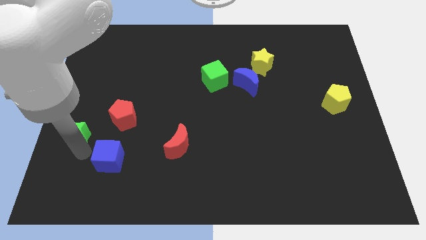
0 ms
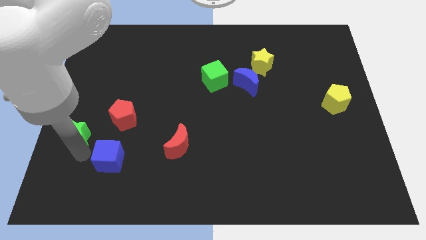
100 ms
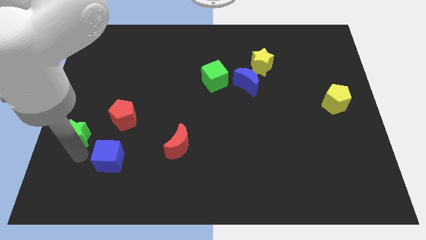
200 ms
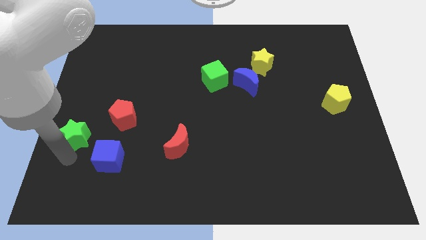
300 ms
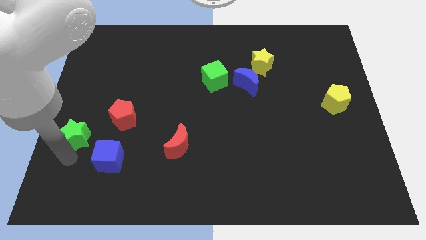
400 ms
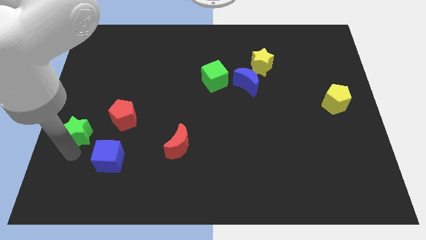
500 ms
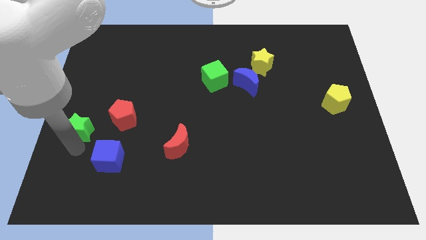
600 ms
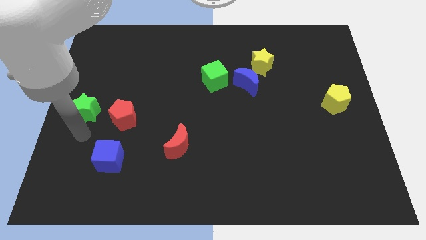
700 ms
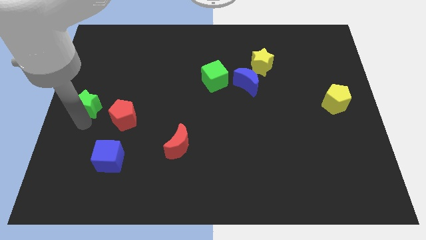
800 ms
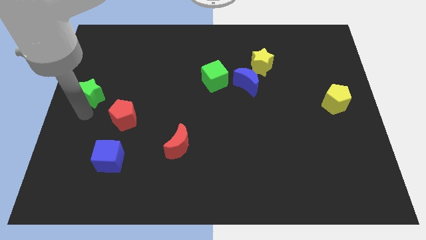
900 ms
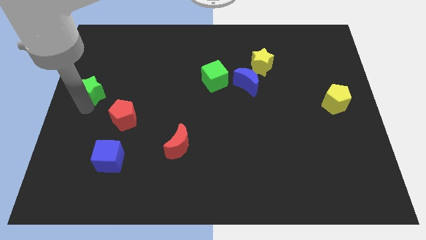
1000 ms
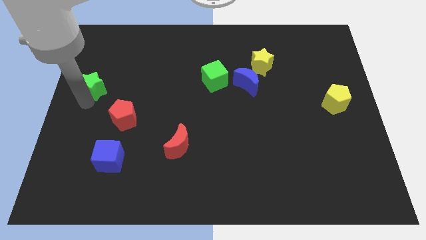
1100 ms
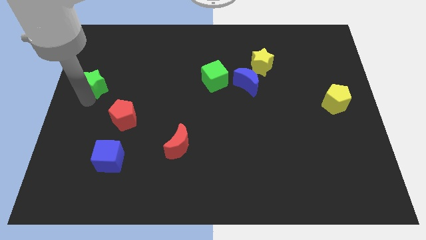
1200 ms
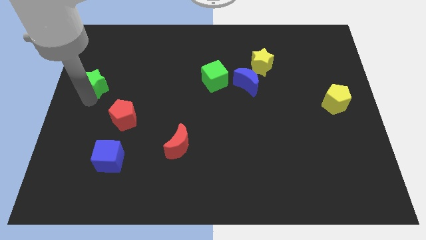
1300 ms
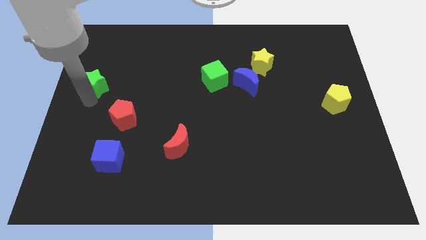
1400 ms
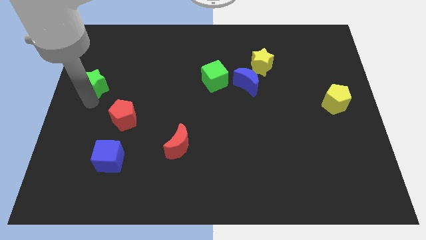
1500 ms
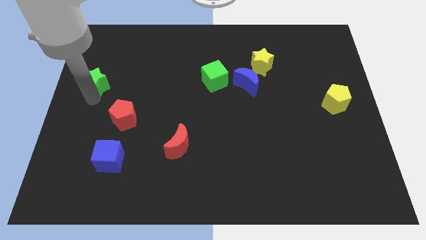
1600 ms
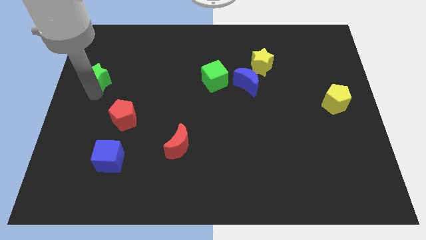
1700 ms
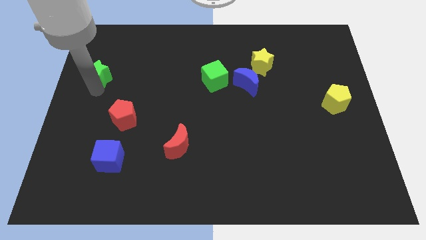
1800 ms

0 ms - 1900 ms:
place the green star towards the left center of the board

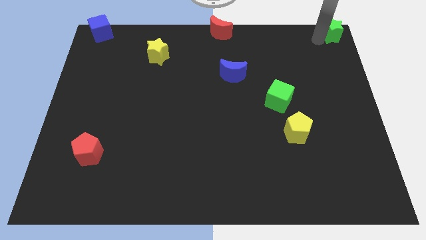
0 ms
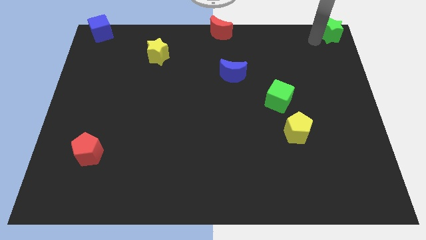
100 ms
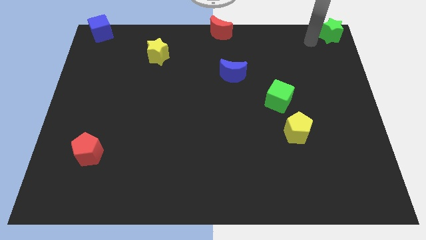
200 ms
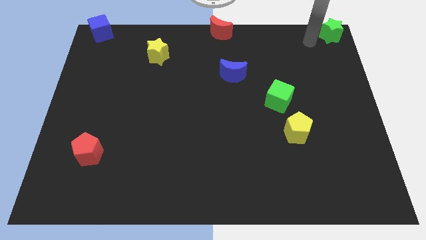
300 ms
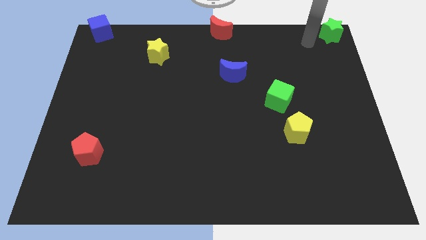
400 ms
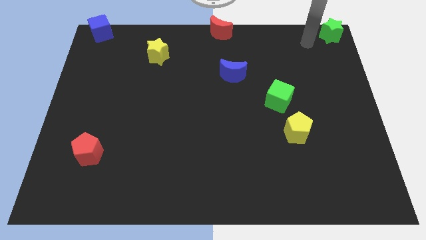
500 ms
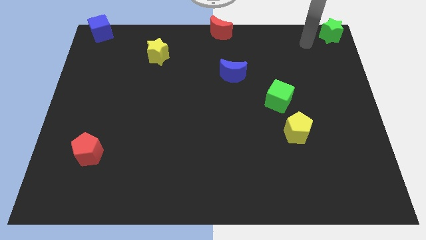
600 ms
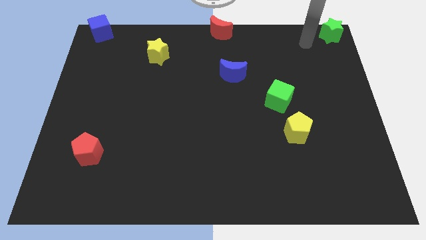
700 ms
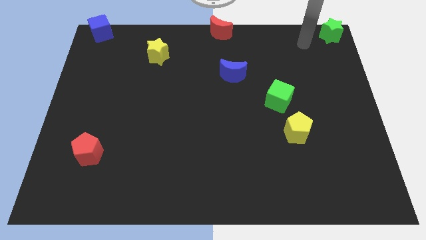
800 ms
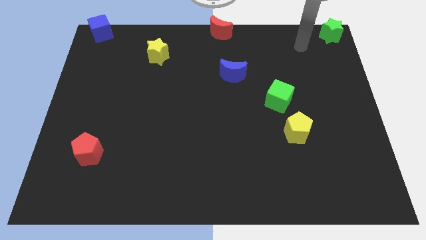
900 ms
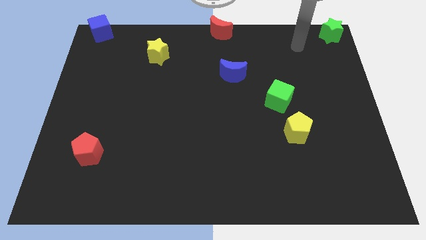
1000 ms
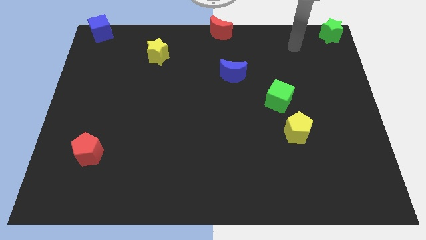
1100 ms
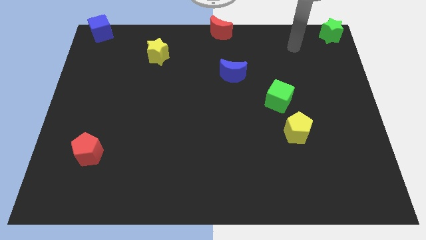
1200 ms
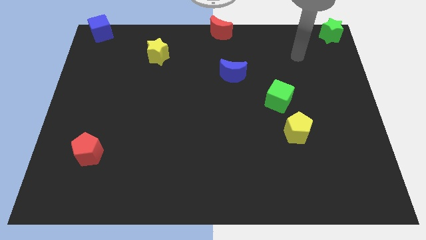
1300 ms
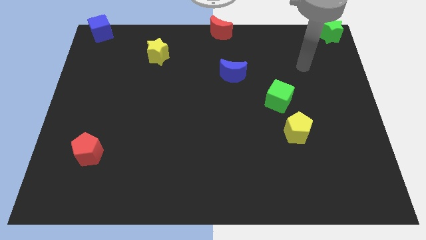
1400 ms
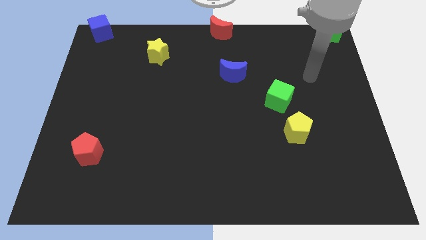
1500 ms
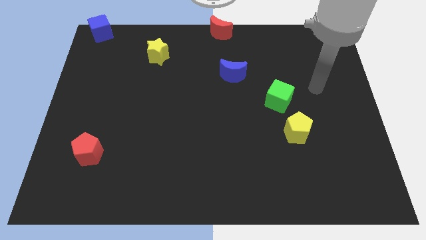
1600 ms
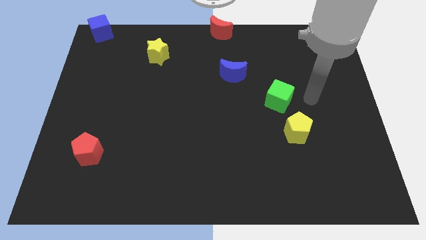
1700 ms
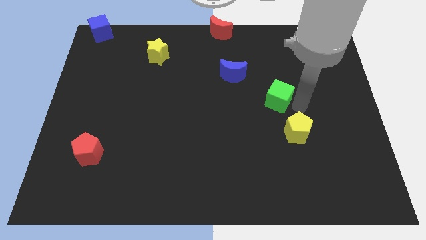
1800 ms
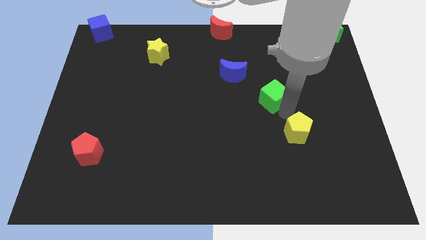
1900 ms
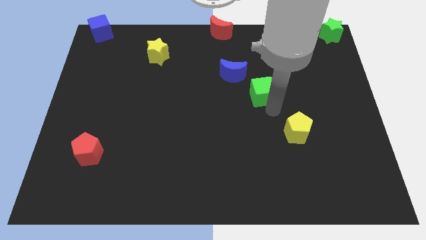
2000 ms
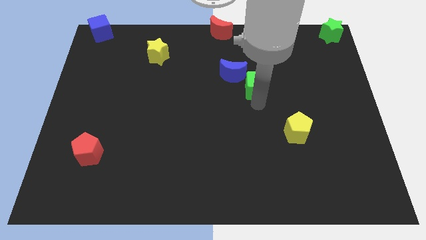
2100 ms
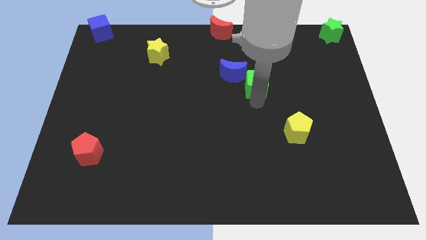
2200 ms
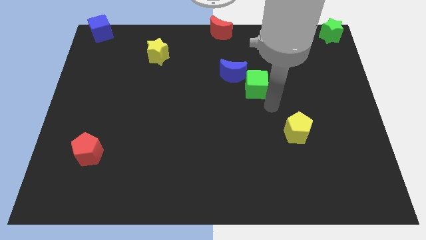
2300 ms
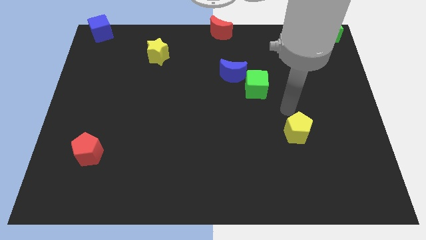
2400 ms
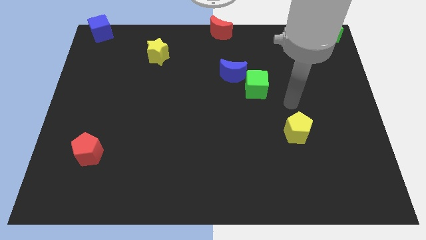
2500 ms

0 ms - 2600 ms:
place the green cube to the bottom right of the blue crescent

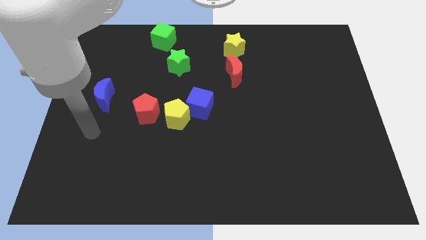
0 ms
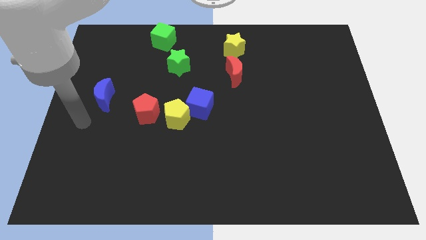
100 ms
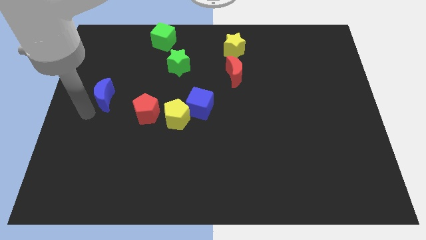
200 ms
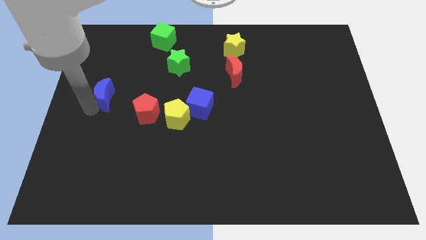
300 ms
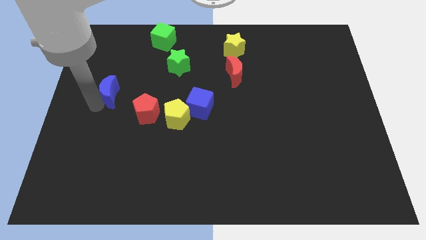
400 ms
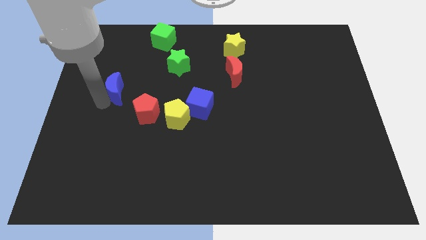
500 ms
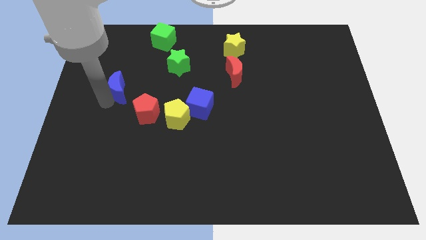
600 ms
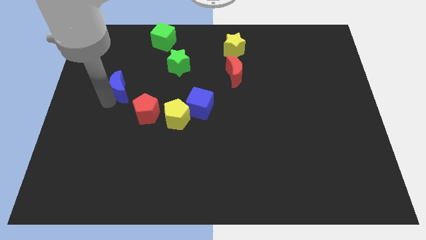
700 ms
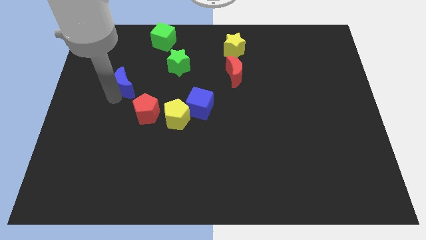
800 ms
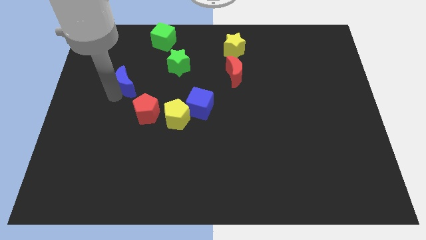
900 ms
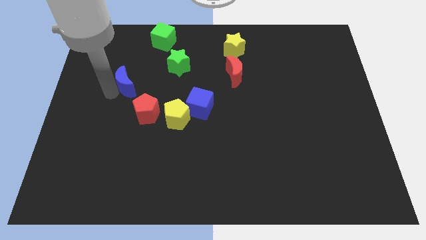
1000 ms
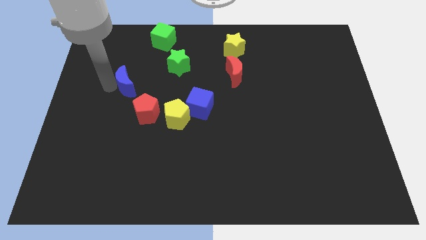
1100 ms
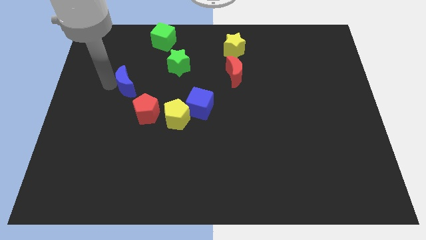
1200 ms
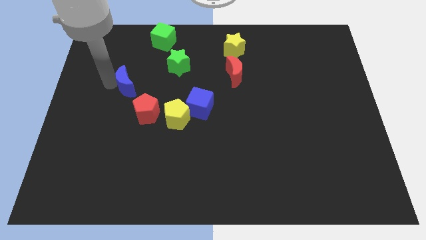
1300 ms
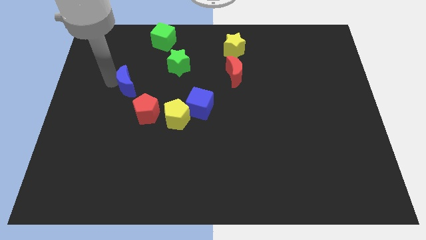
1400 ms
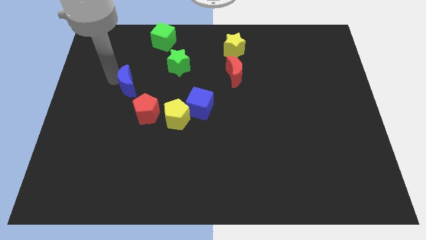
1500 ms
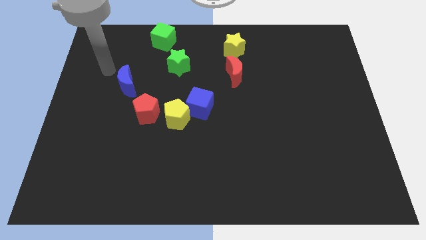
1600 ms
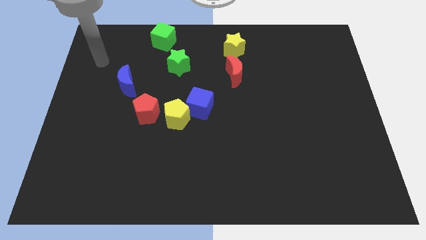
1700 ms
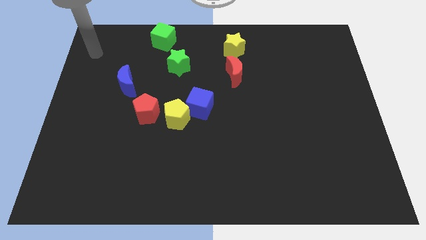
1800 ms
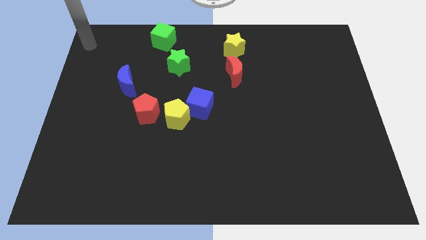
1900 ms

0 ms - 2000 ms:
place the blue crescent at the top left side of the red pentagon

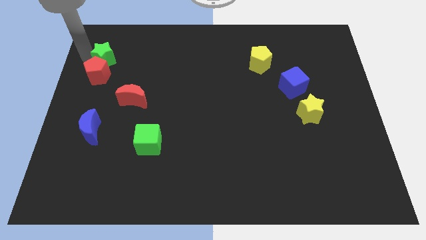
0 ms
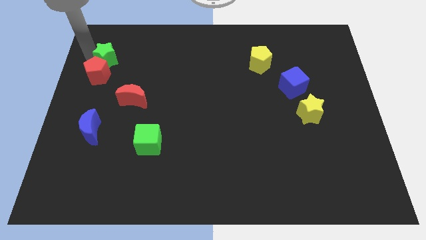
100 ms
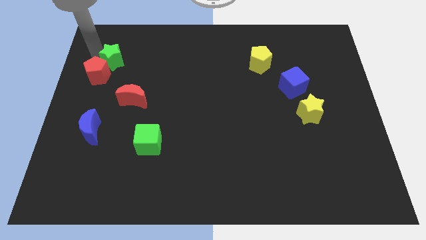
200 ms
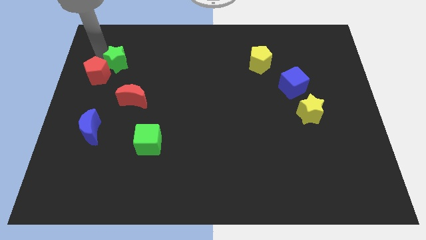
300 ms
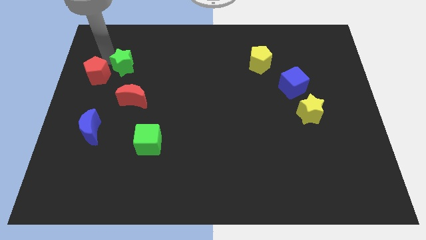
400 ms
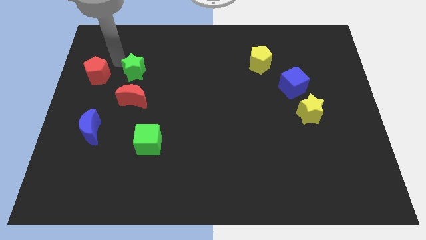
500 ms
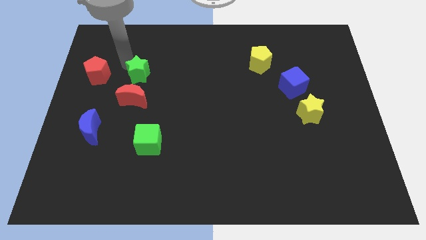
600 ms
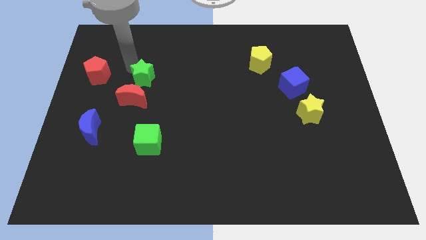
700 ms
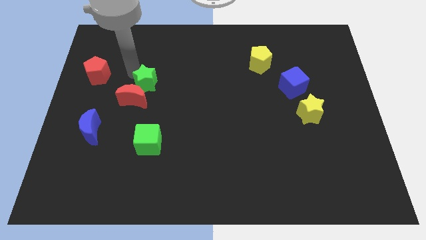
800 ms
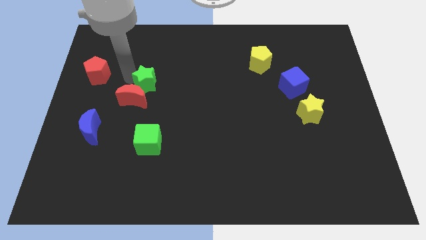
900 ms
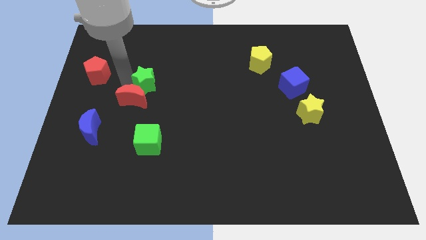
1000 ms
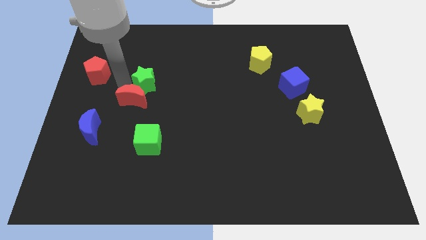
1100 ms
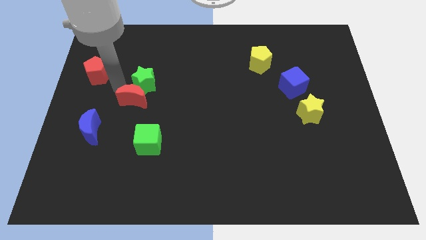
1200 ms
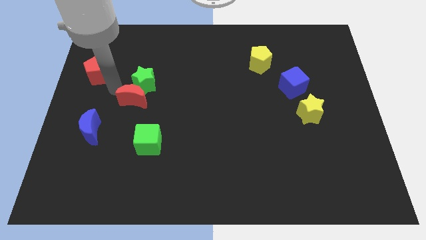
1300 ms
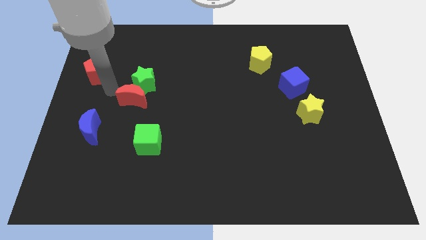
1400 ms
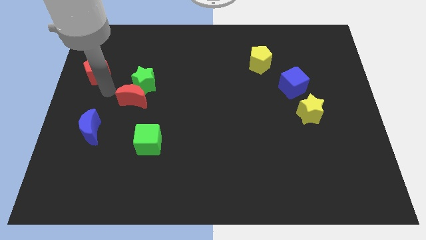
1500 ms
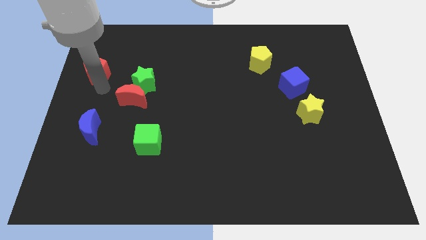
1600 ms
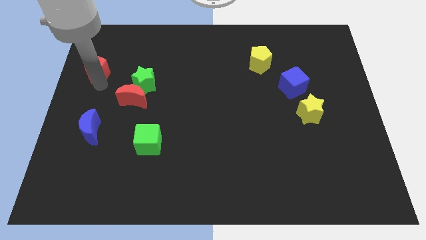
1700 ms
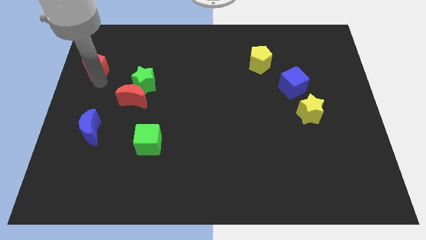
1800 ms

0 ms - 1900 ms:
slightly push the green star

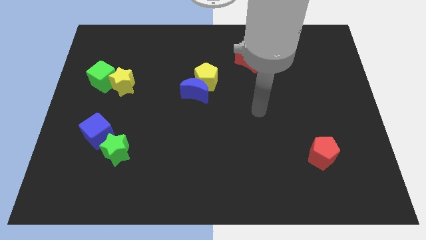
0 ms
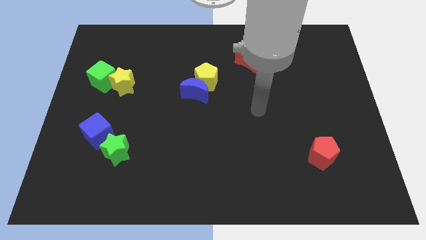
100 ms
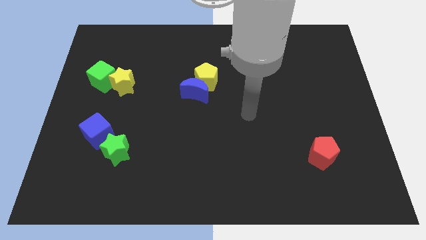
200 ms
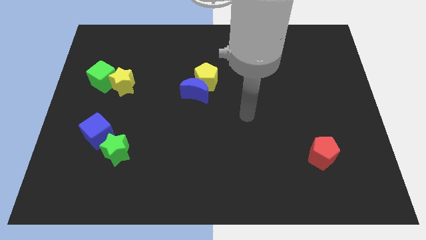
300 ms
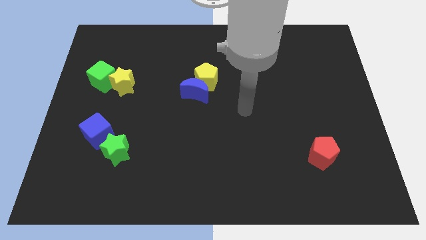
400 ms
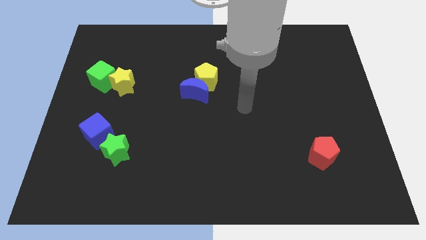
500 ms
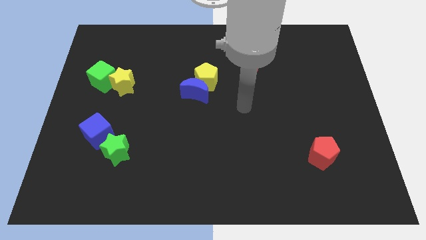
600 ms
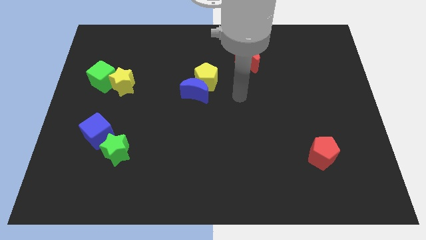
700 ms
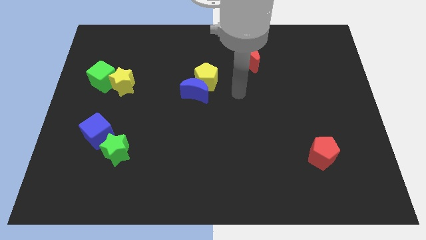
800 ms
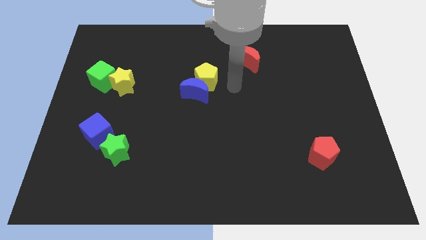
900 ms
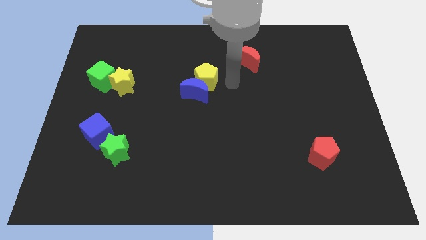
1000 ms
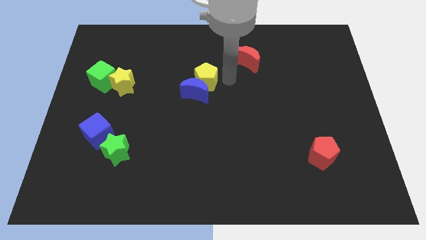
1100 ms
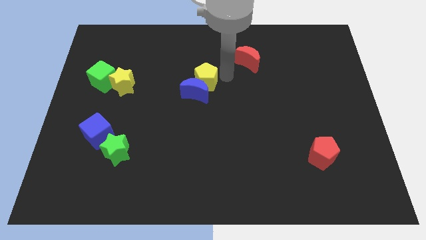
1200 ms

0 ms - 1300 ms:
point your arm at the right of the yellow pentagon
